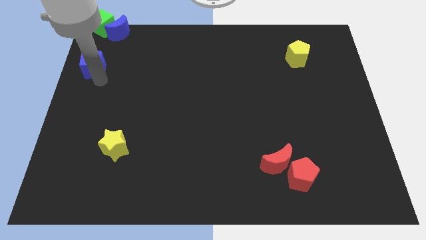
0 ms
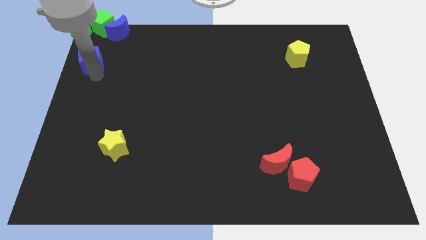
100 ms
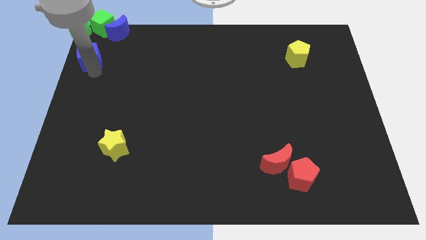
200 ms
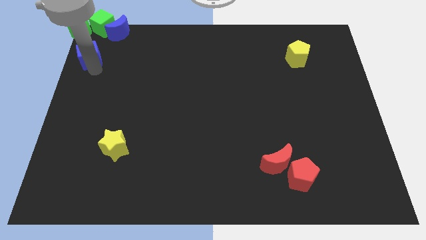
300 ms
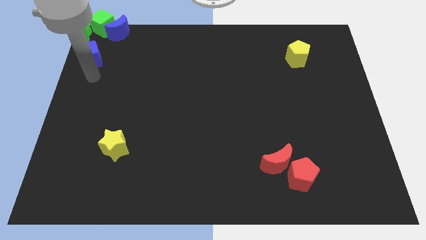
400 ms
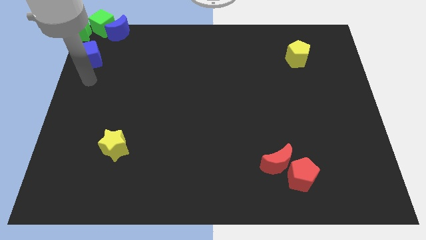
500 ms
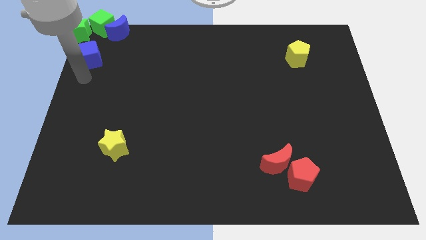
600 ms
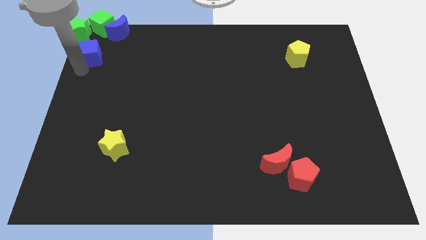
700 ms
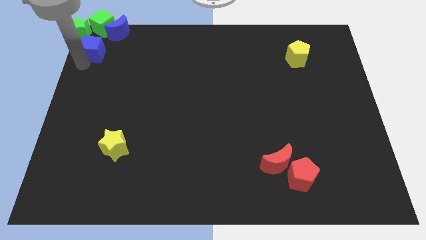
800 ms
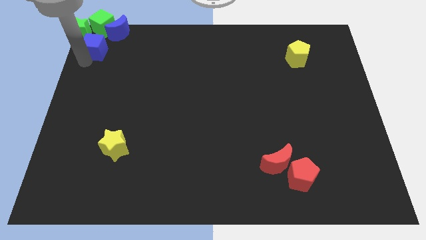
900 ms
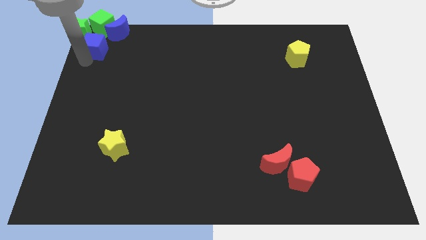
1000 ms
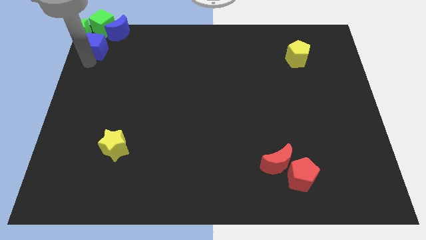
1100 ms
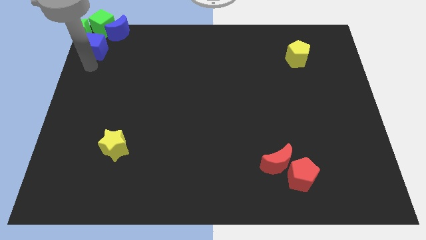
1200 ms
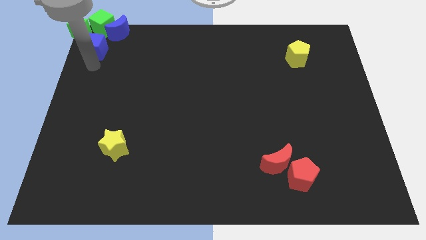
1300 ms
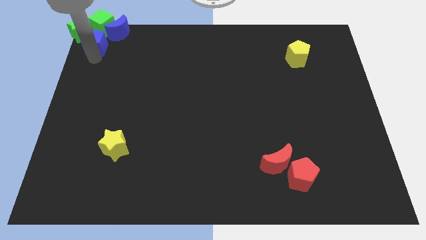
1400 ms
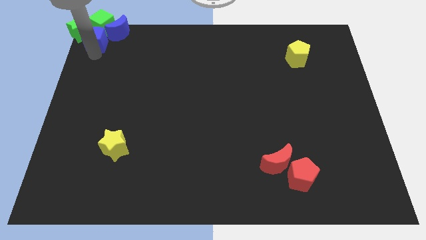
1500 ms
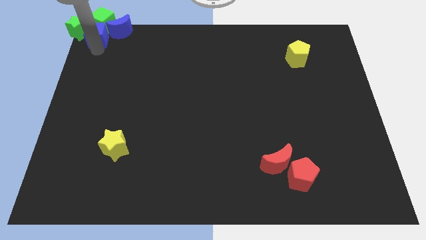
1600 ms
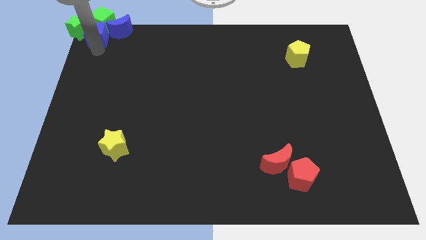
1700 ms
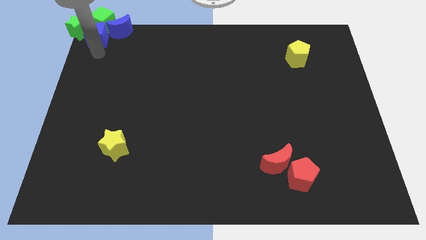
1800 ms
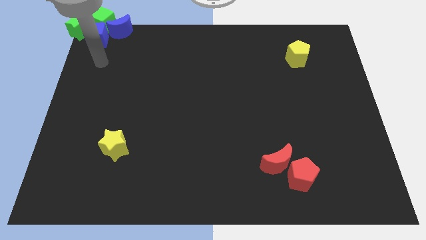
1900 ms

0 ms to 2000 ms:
take the blue cube into the bottom side of the green cube

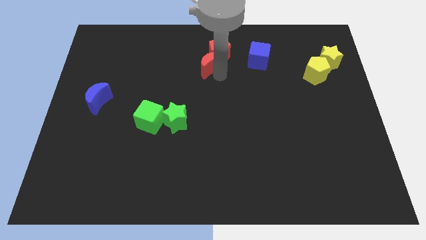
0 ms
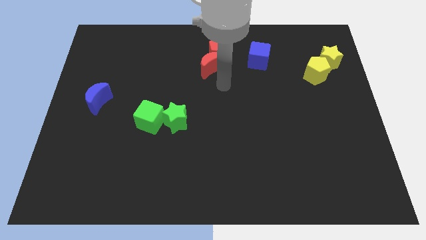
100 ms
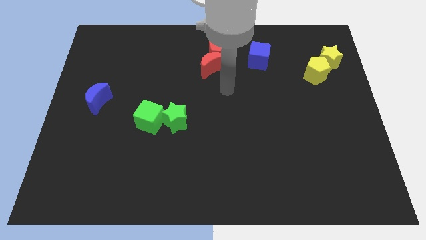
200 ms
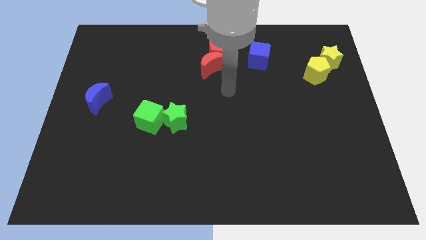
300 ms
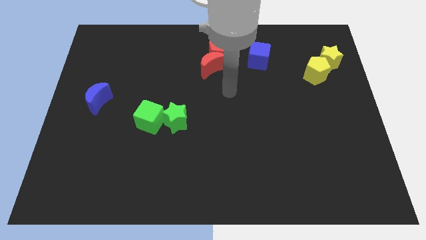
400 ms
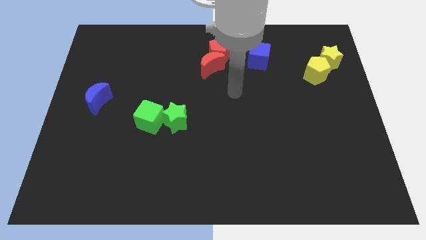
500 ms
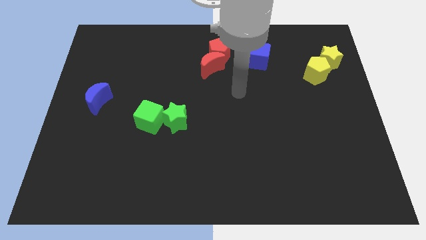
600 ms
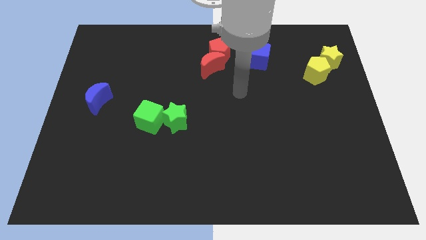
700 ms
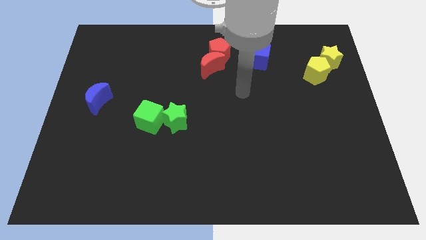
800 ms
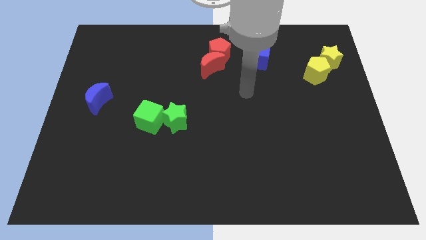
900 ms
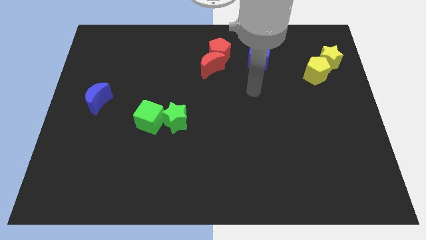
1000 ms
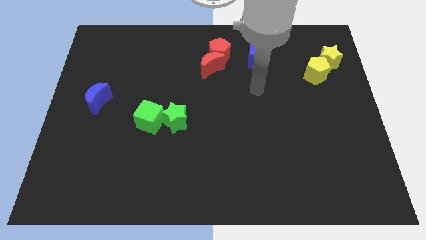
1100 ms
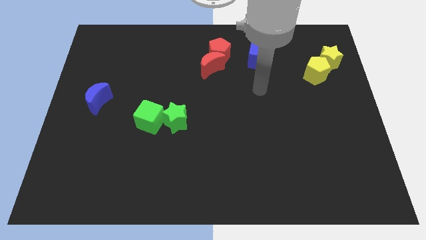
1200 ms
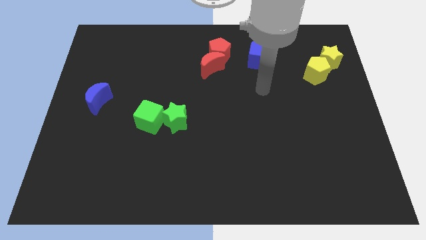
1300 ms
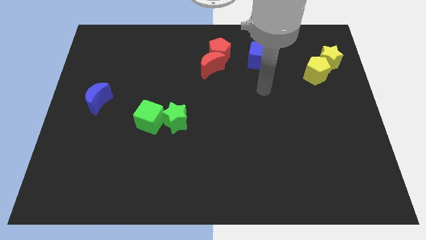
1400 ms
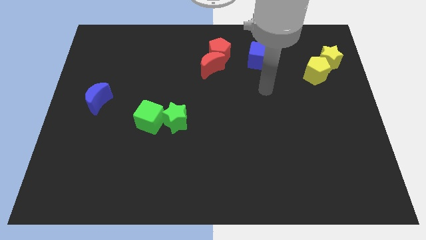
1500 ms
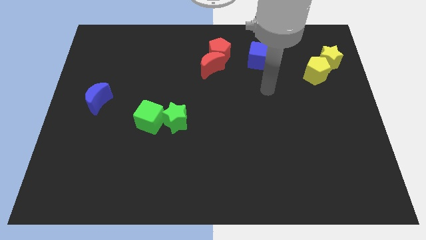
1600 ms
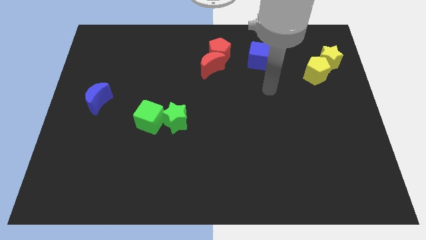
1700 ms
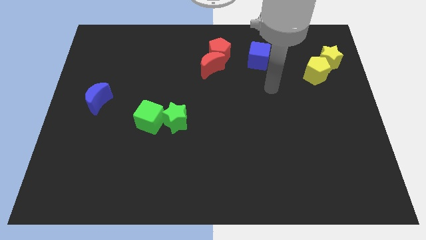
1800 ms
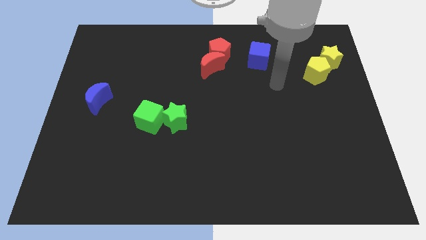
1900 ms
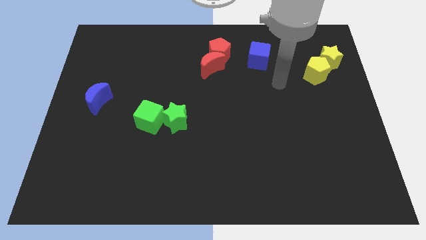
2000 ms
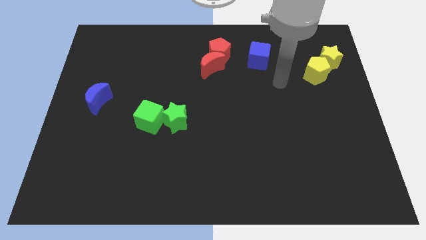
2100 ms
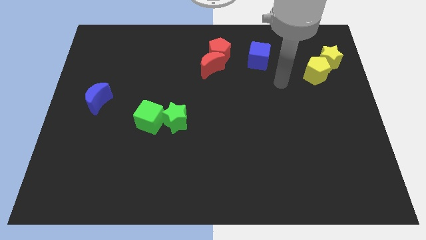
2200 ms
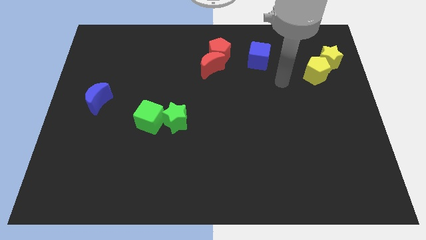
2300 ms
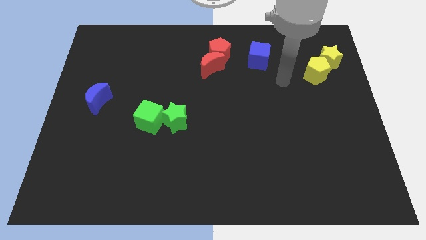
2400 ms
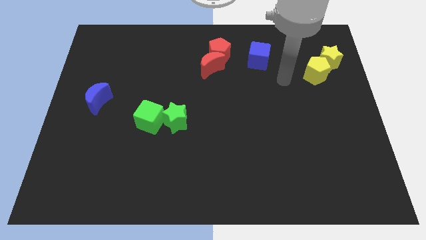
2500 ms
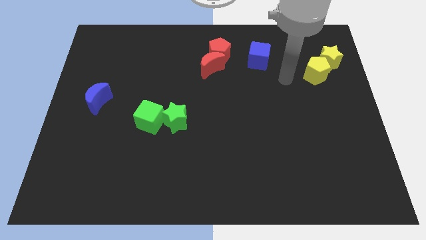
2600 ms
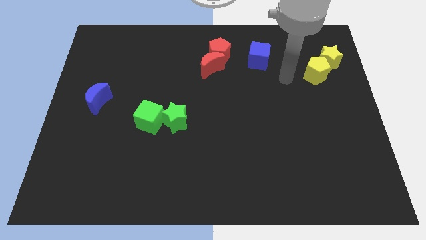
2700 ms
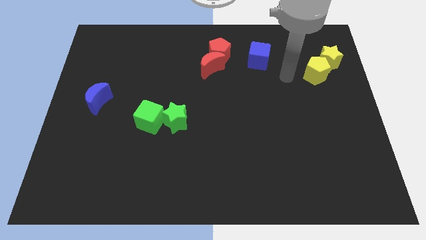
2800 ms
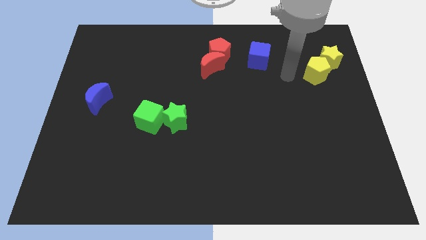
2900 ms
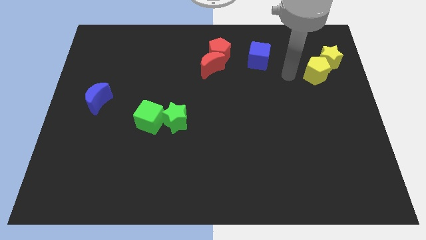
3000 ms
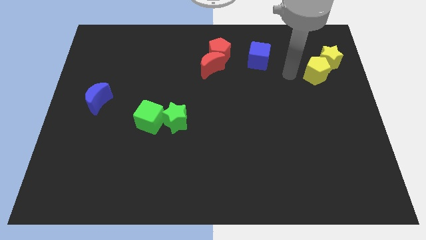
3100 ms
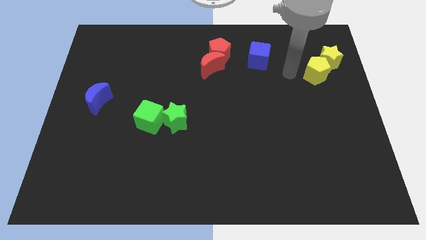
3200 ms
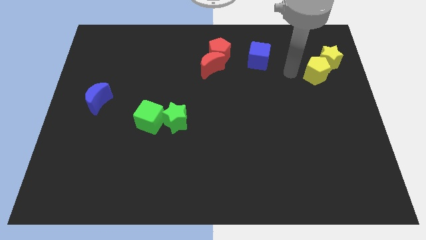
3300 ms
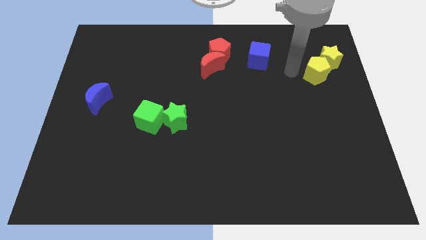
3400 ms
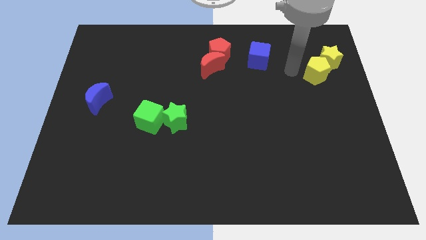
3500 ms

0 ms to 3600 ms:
place your hand in between the blue cube and yellow pentagon

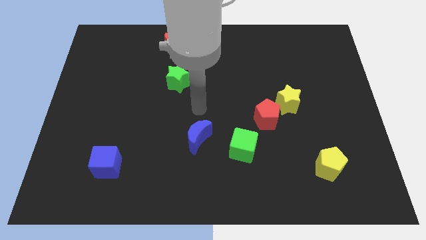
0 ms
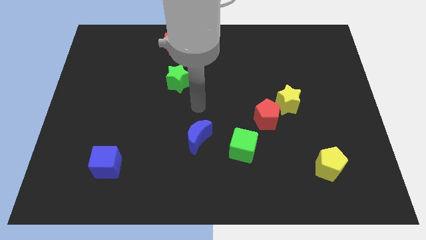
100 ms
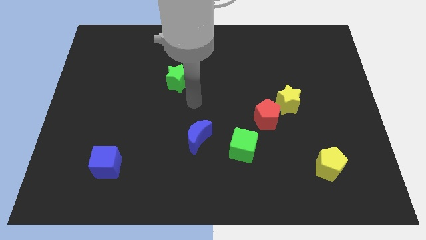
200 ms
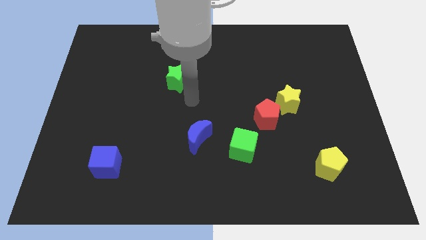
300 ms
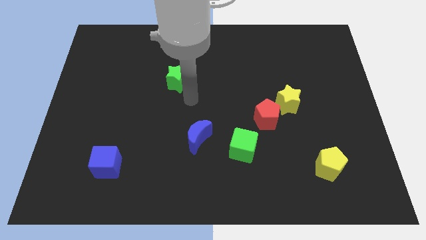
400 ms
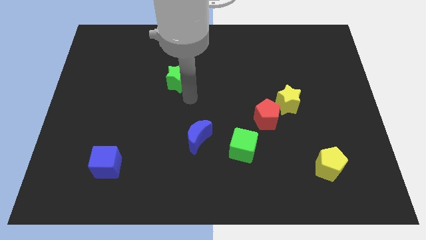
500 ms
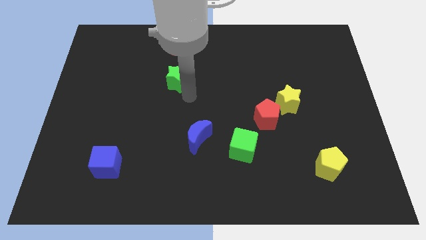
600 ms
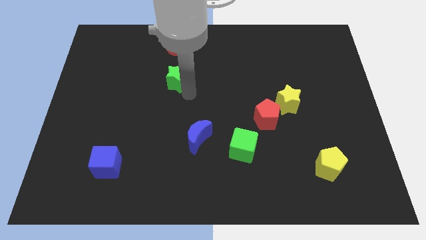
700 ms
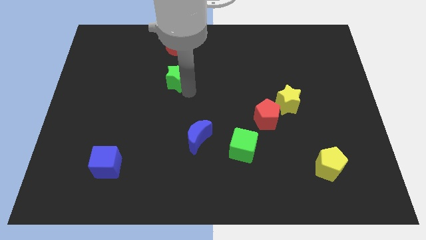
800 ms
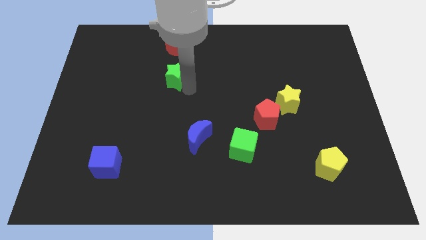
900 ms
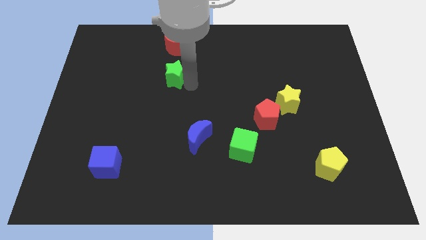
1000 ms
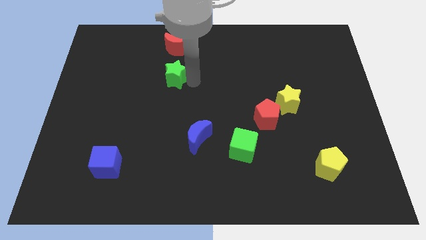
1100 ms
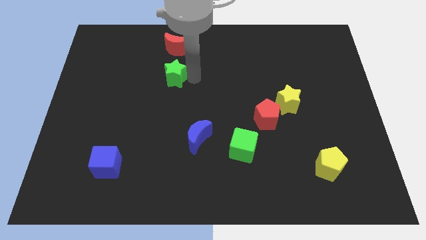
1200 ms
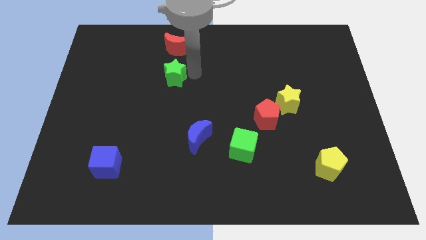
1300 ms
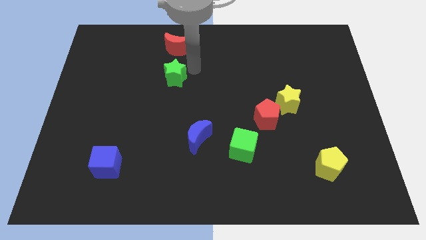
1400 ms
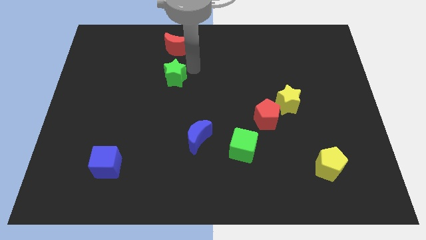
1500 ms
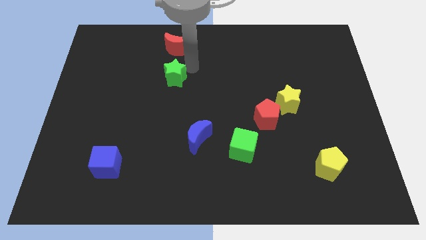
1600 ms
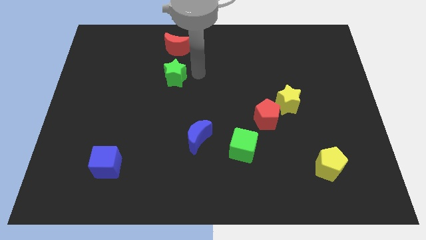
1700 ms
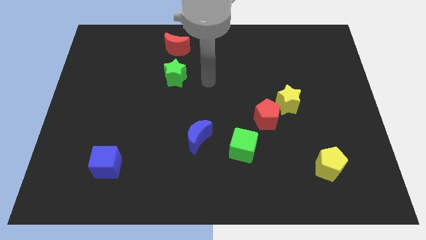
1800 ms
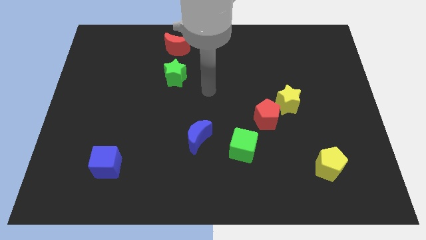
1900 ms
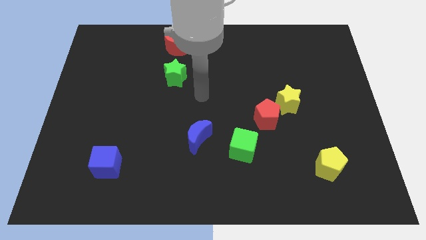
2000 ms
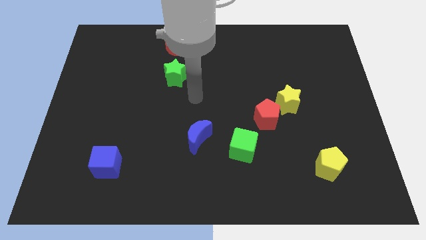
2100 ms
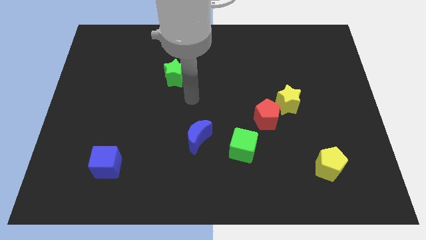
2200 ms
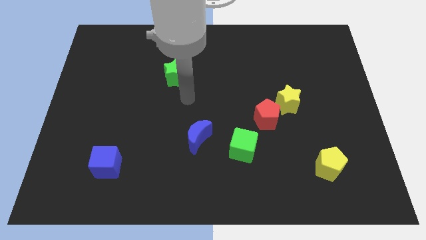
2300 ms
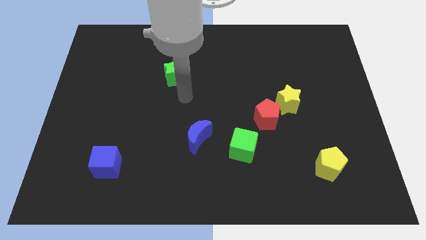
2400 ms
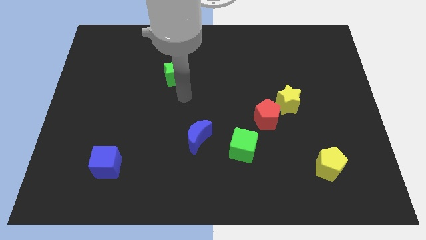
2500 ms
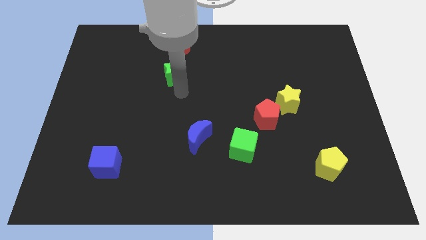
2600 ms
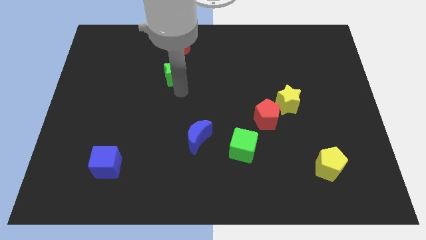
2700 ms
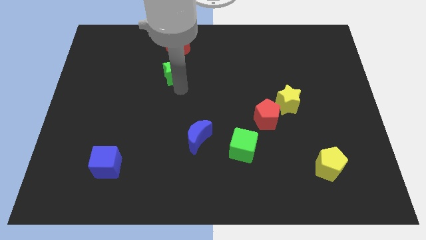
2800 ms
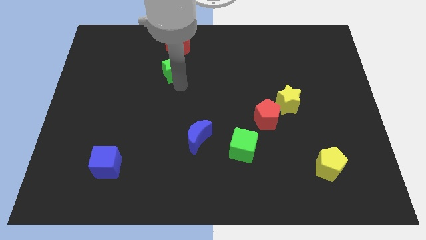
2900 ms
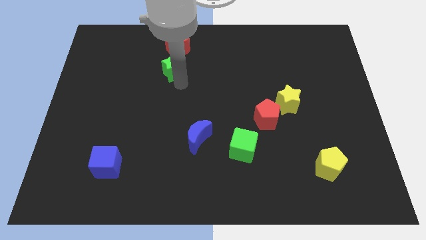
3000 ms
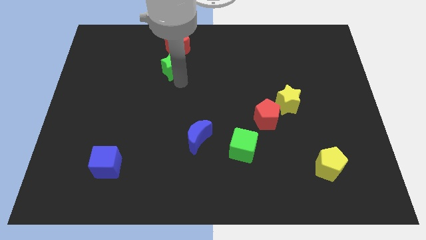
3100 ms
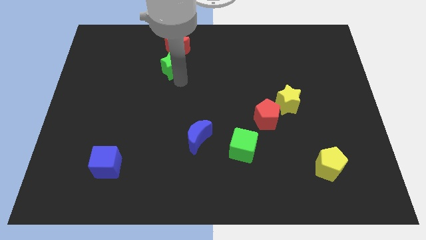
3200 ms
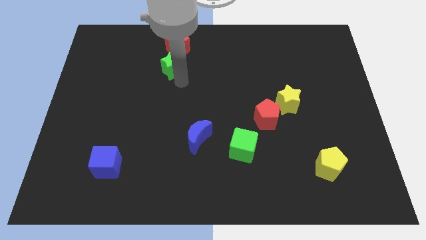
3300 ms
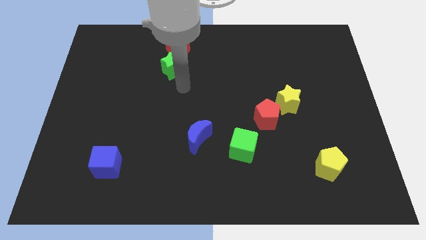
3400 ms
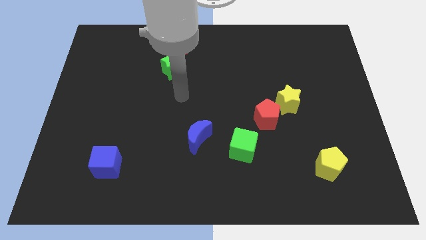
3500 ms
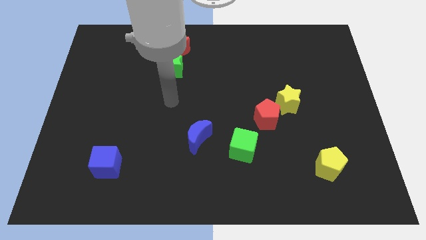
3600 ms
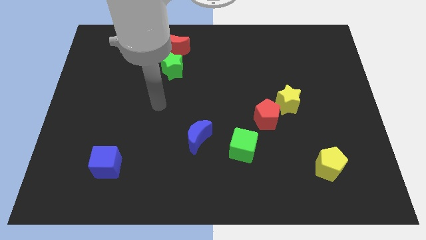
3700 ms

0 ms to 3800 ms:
place the green star below the red crescent
